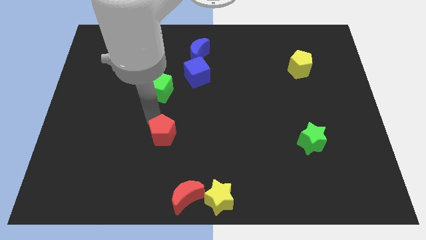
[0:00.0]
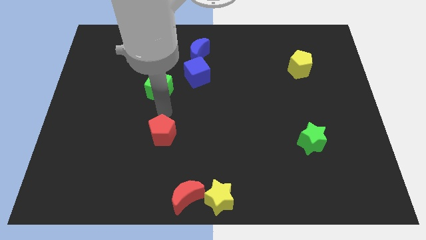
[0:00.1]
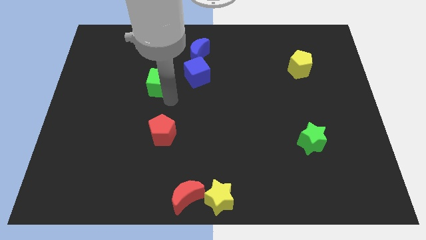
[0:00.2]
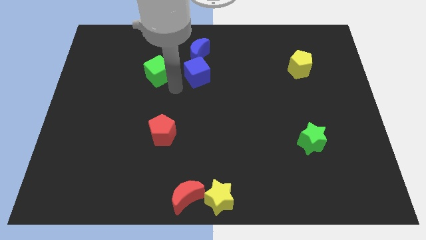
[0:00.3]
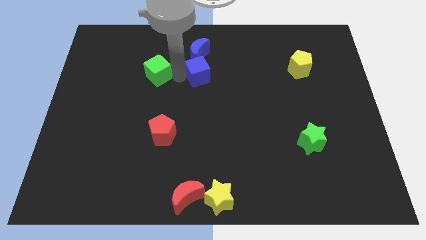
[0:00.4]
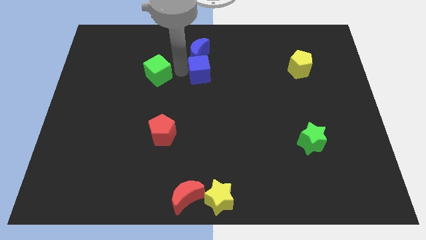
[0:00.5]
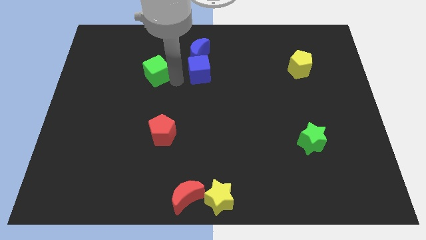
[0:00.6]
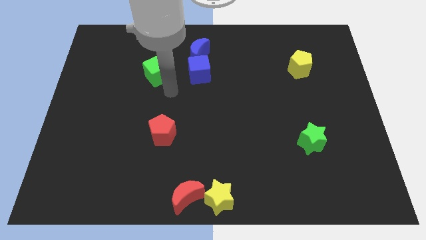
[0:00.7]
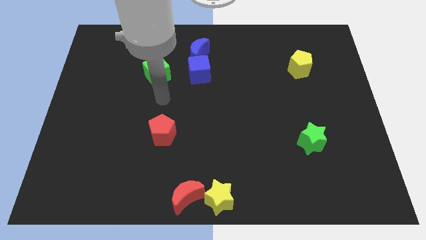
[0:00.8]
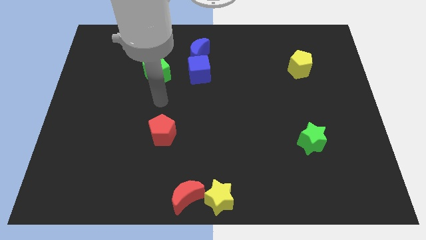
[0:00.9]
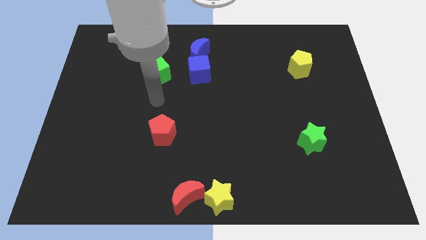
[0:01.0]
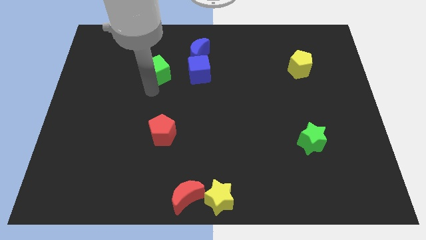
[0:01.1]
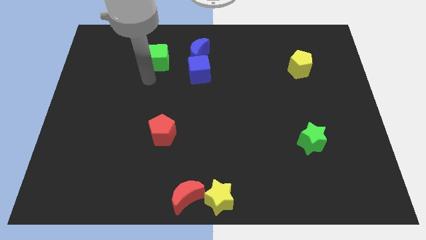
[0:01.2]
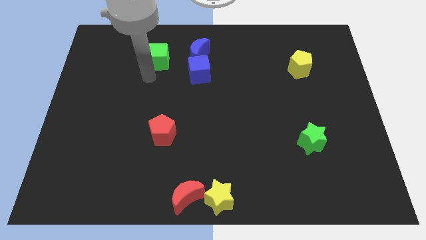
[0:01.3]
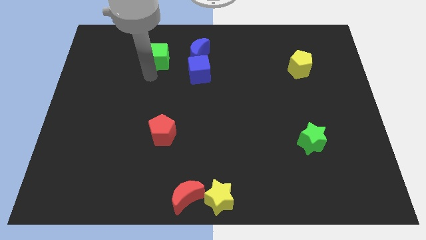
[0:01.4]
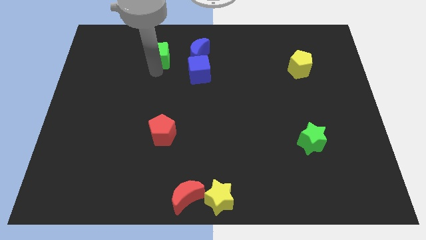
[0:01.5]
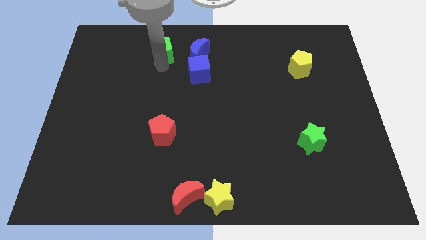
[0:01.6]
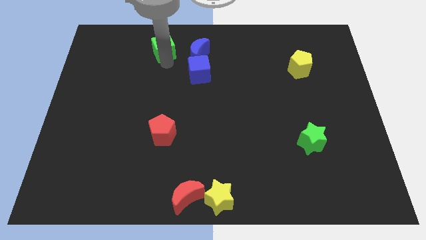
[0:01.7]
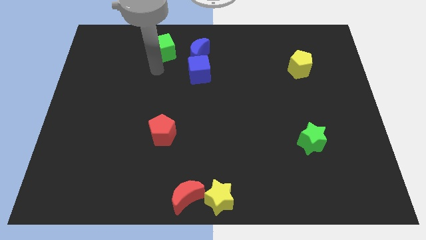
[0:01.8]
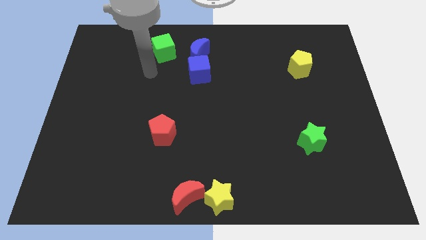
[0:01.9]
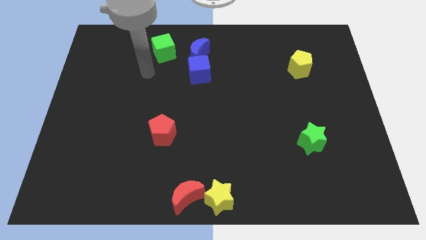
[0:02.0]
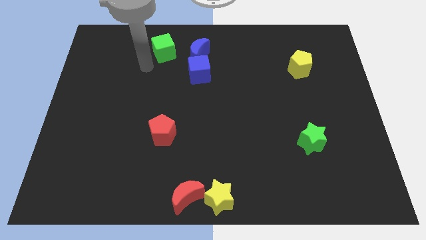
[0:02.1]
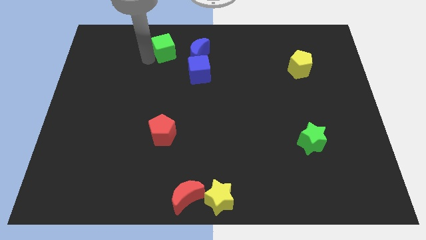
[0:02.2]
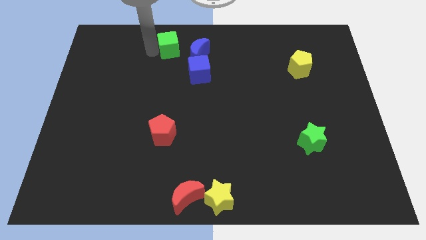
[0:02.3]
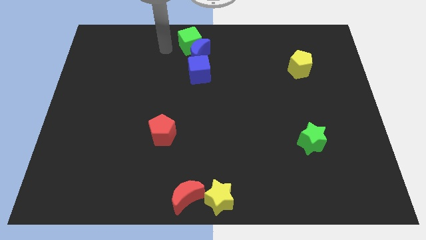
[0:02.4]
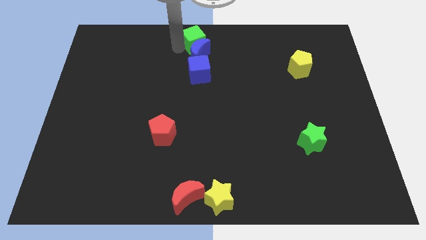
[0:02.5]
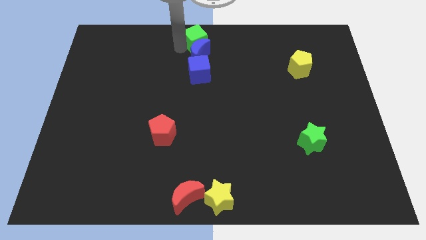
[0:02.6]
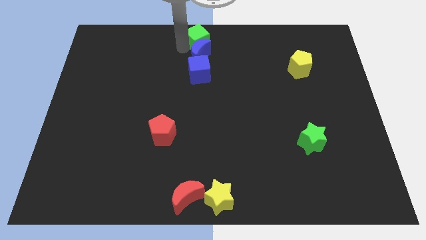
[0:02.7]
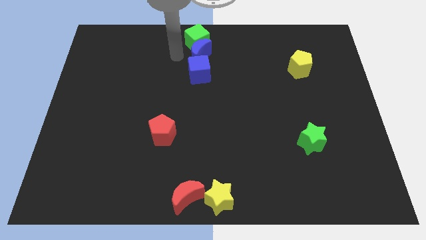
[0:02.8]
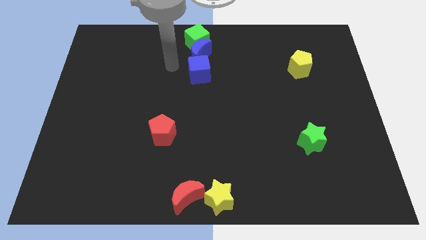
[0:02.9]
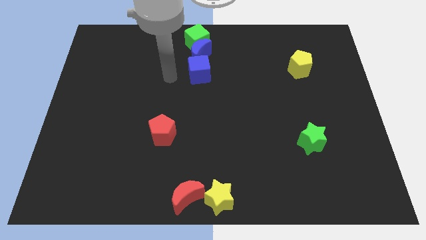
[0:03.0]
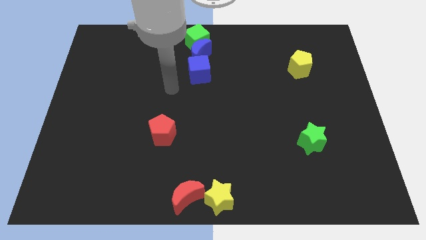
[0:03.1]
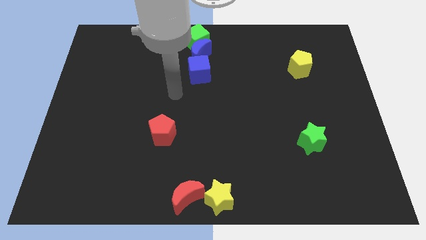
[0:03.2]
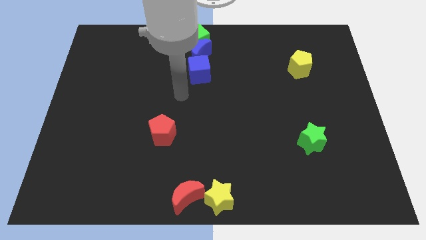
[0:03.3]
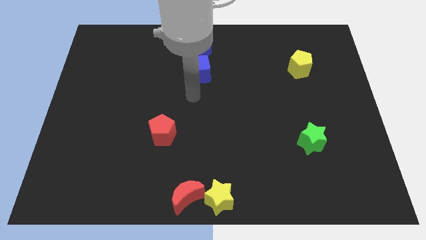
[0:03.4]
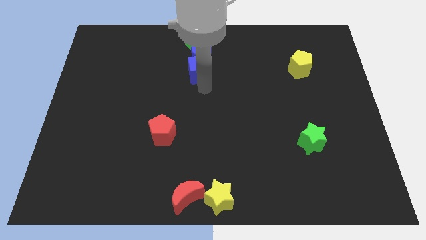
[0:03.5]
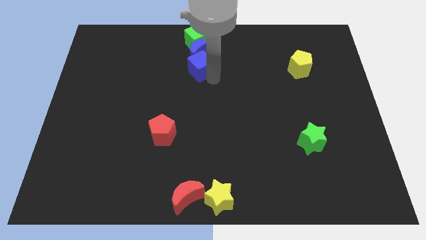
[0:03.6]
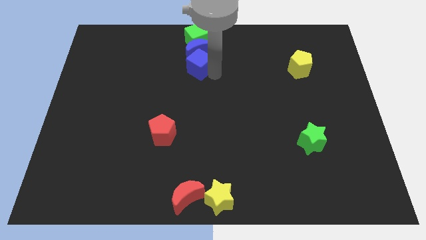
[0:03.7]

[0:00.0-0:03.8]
make a vertical line with the green cube blue cube and blue crescent

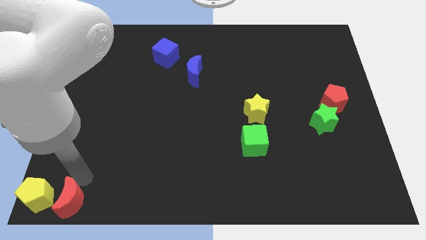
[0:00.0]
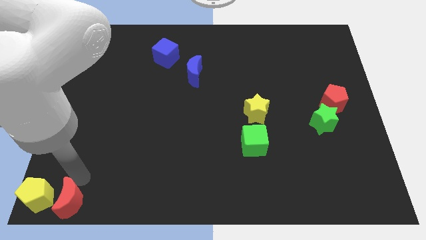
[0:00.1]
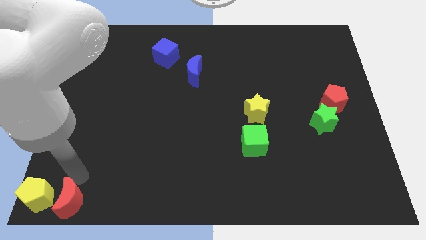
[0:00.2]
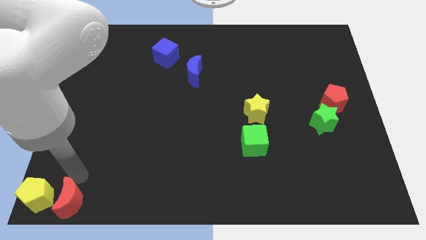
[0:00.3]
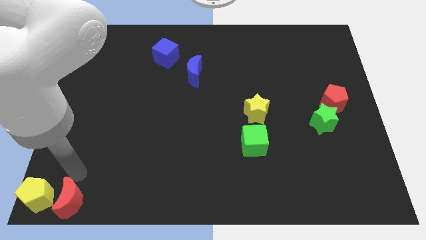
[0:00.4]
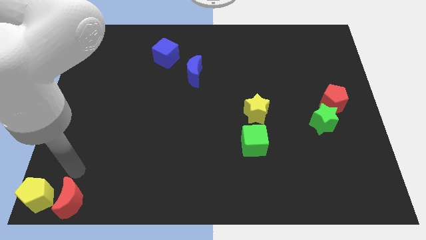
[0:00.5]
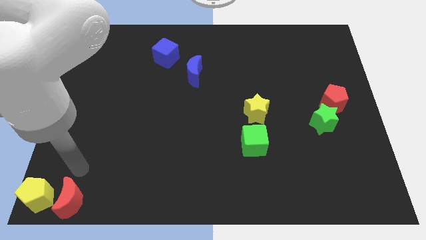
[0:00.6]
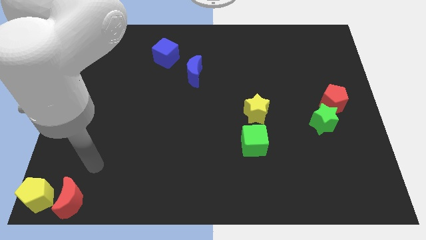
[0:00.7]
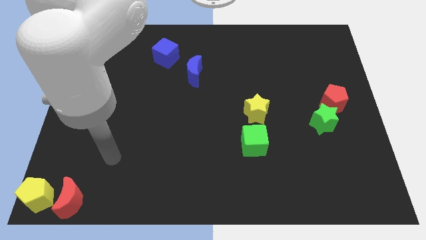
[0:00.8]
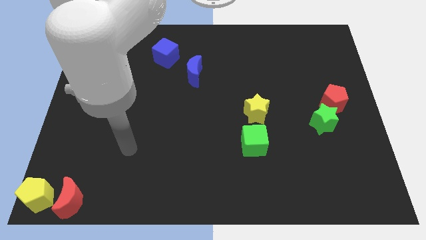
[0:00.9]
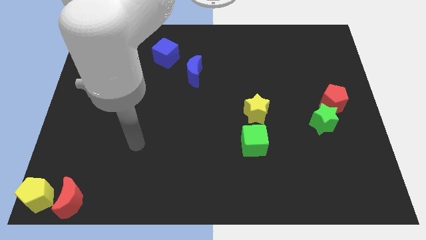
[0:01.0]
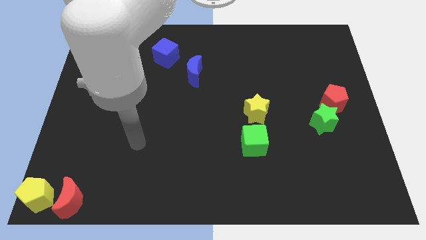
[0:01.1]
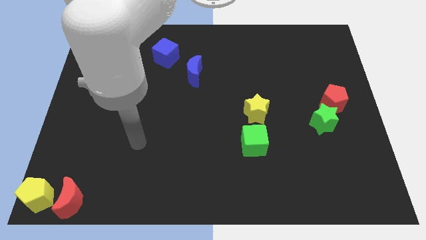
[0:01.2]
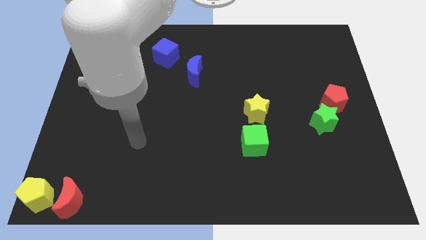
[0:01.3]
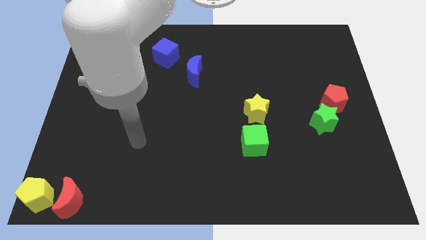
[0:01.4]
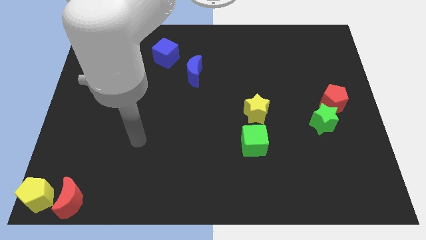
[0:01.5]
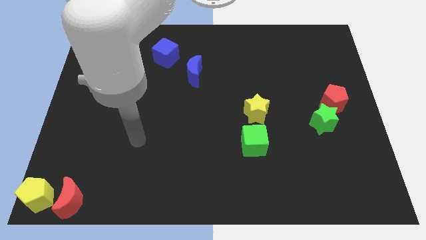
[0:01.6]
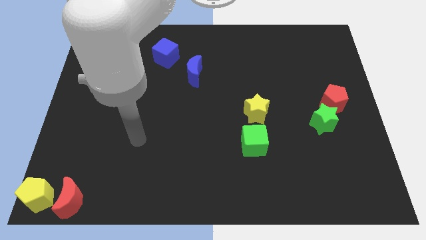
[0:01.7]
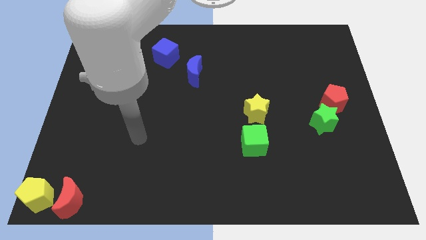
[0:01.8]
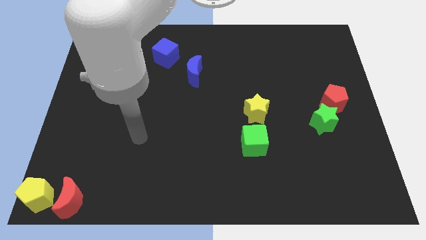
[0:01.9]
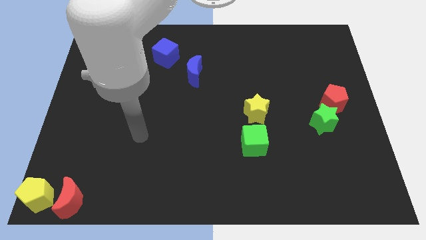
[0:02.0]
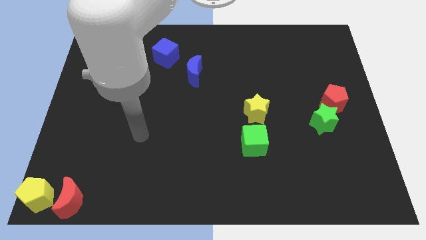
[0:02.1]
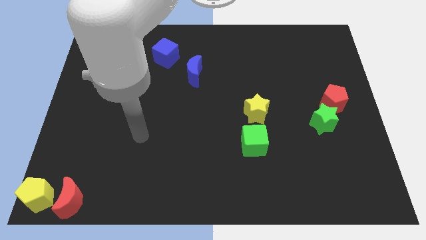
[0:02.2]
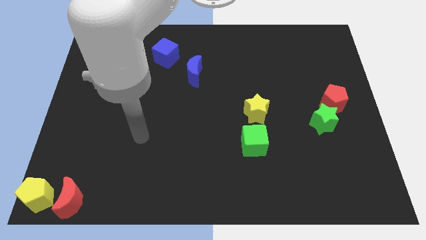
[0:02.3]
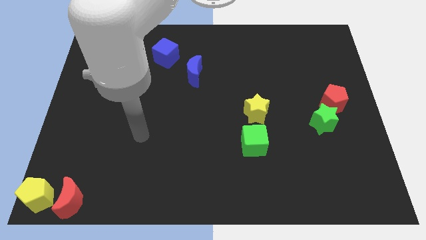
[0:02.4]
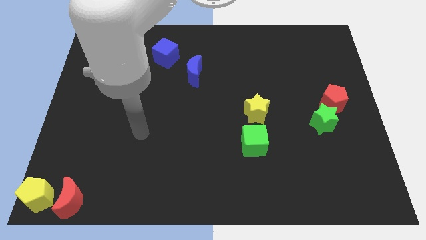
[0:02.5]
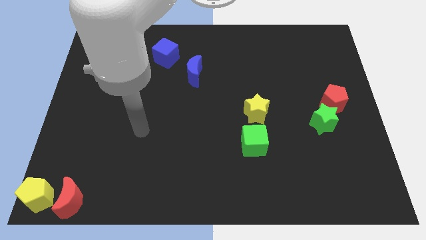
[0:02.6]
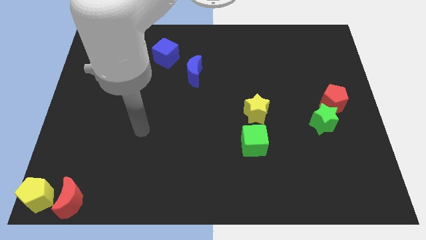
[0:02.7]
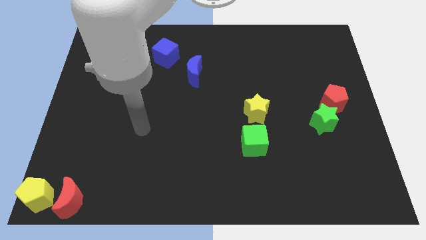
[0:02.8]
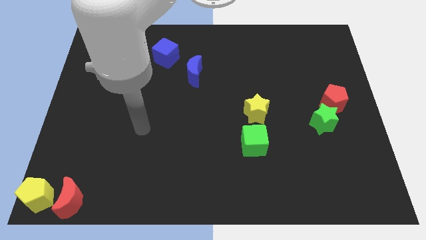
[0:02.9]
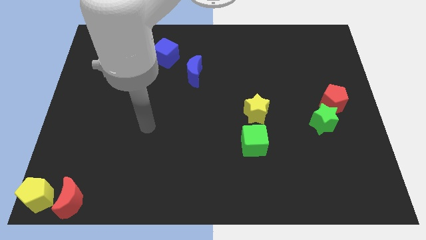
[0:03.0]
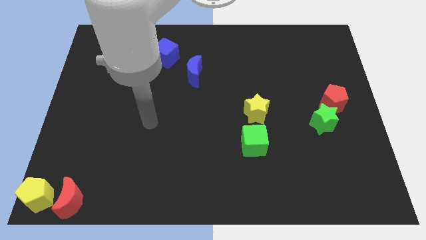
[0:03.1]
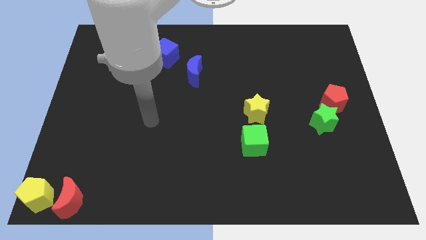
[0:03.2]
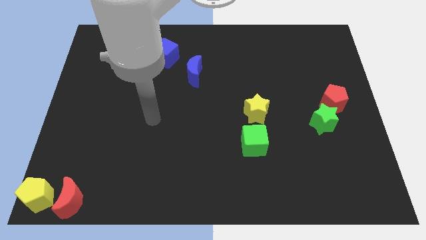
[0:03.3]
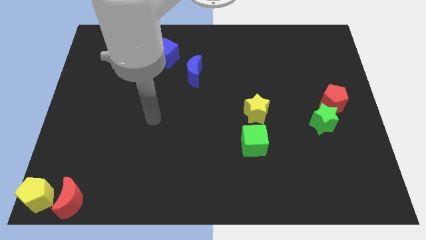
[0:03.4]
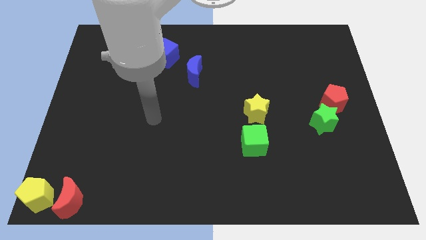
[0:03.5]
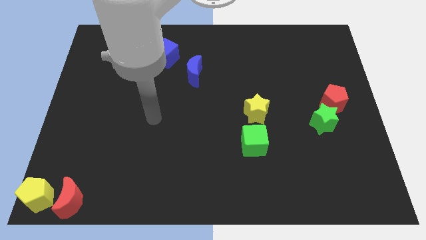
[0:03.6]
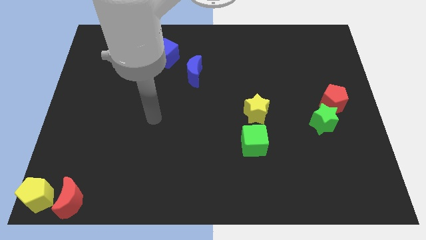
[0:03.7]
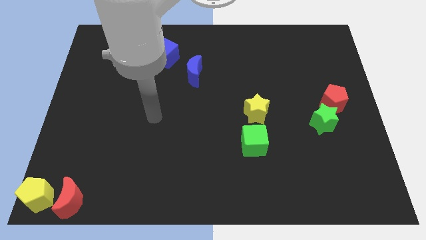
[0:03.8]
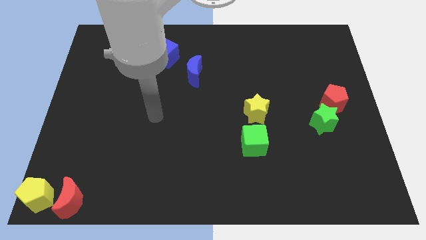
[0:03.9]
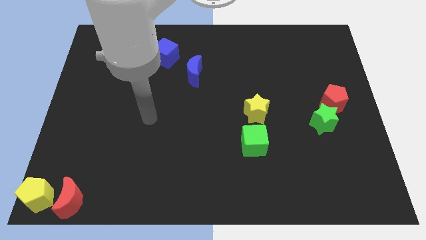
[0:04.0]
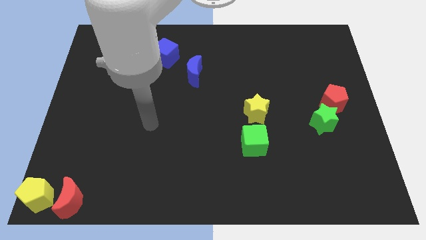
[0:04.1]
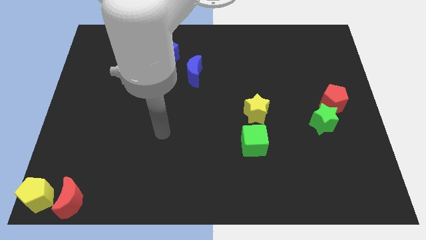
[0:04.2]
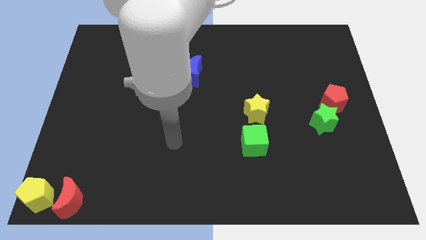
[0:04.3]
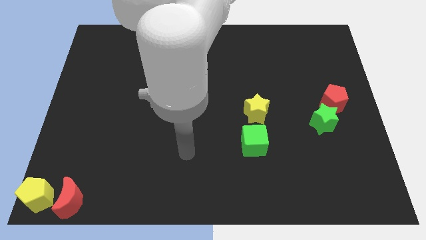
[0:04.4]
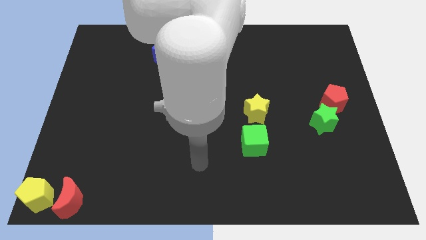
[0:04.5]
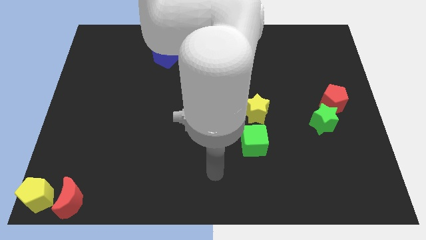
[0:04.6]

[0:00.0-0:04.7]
move your arm to the bottom center of the board

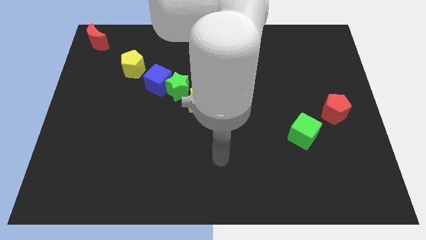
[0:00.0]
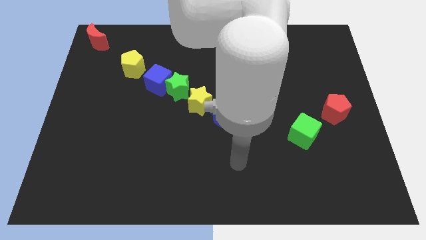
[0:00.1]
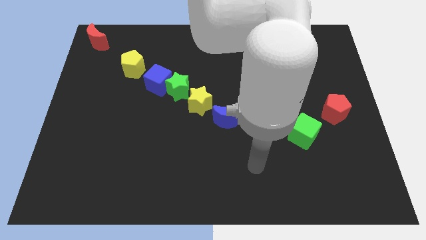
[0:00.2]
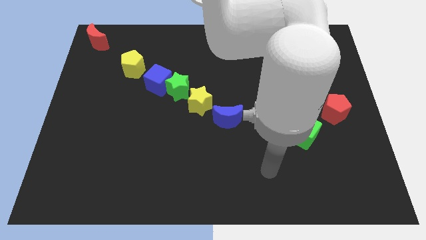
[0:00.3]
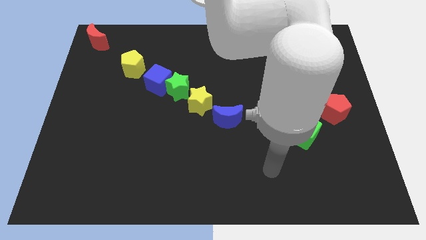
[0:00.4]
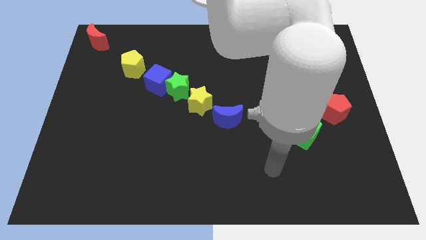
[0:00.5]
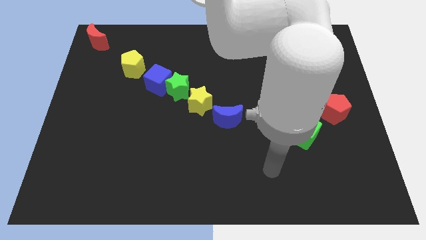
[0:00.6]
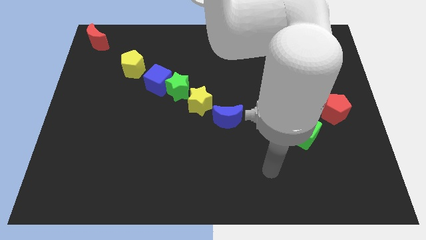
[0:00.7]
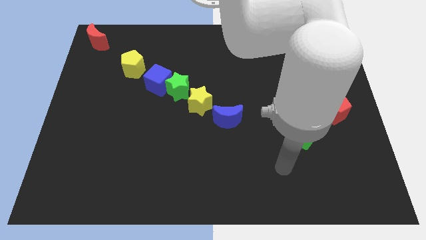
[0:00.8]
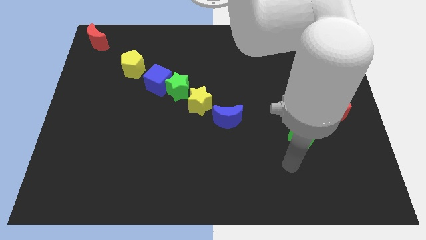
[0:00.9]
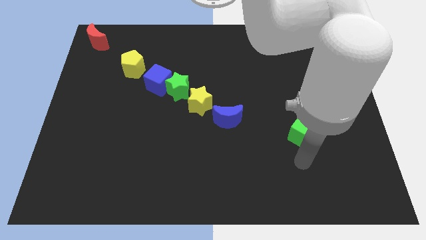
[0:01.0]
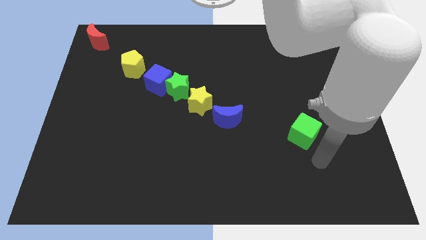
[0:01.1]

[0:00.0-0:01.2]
move arm below the green cube
